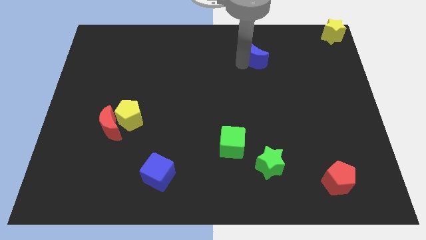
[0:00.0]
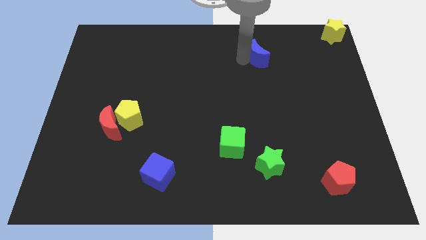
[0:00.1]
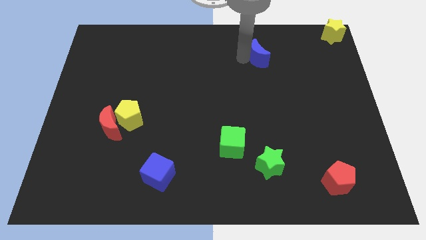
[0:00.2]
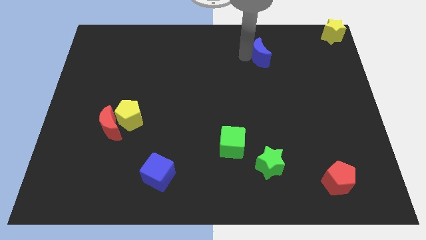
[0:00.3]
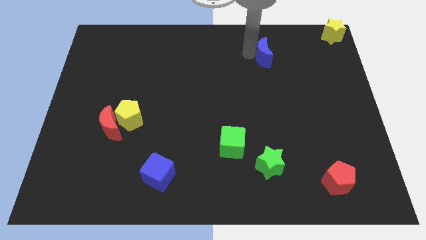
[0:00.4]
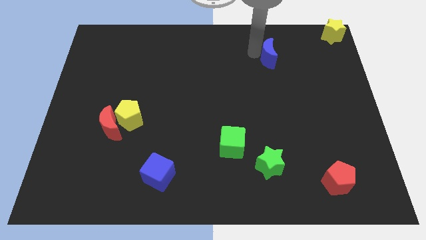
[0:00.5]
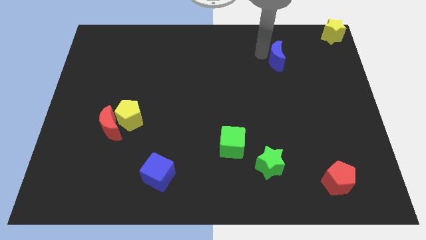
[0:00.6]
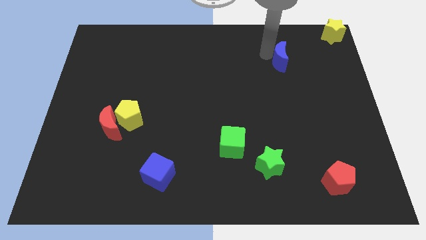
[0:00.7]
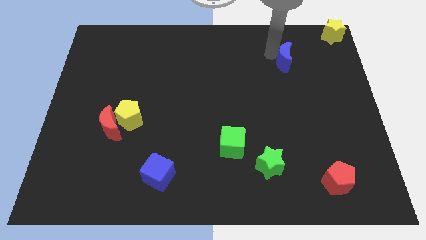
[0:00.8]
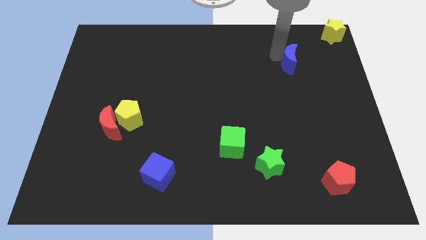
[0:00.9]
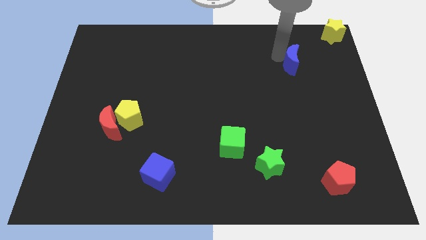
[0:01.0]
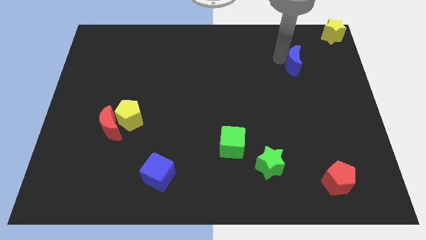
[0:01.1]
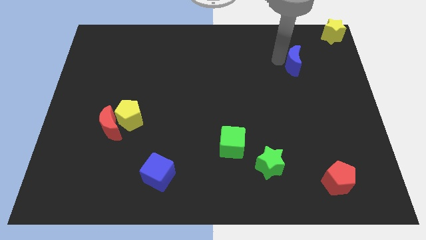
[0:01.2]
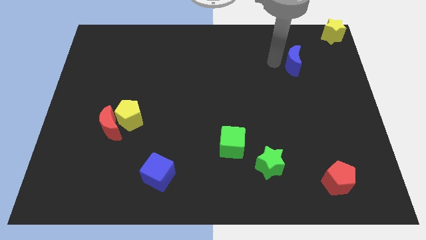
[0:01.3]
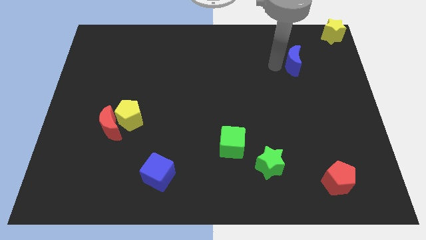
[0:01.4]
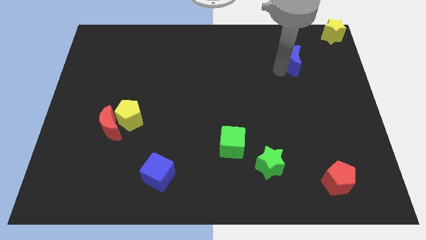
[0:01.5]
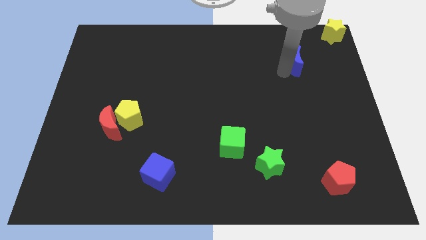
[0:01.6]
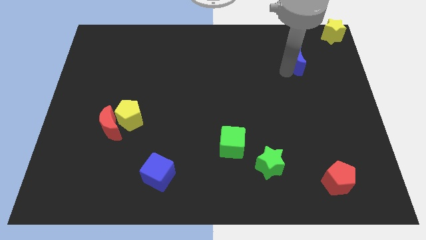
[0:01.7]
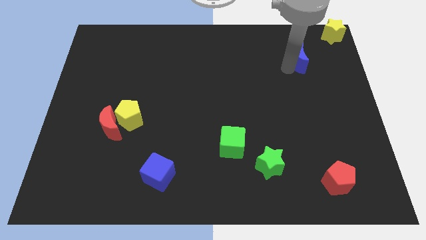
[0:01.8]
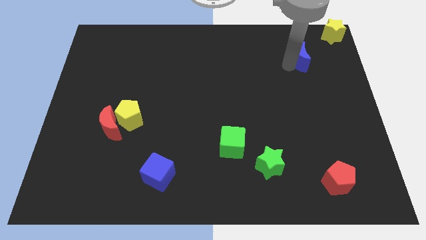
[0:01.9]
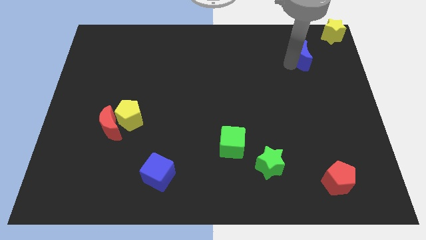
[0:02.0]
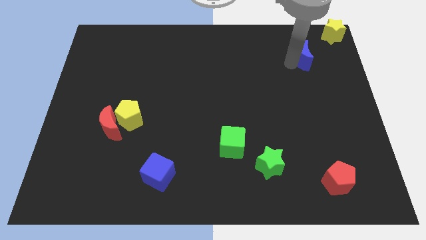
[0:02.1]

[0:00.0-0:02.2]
move the blue crescent to the top right of the board

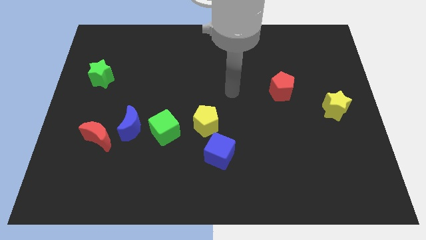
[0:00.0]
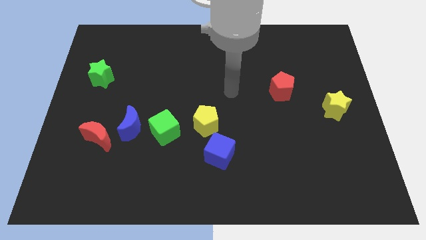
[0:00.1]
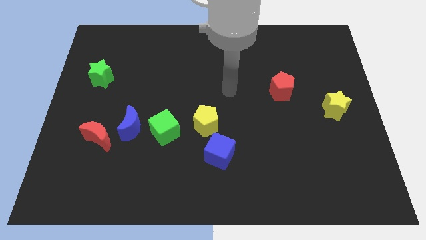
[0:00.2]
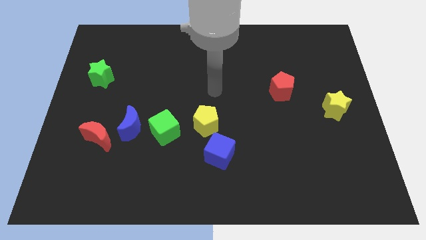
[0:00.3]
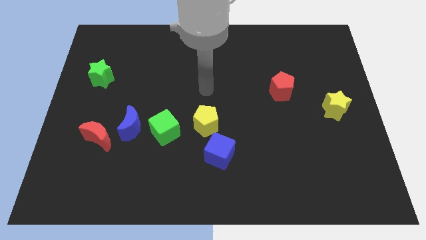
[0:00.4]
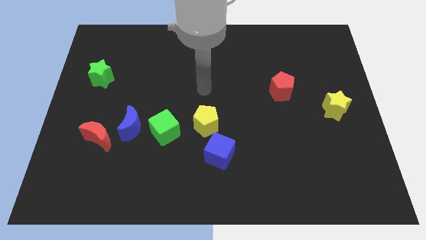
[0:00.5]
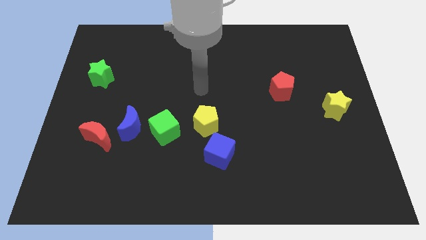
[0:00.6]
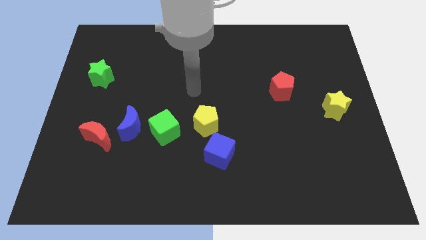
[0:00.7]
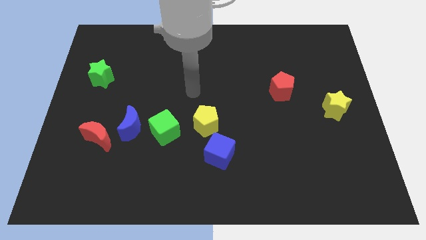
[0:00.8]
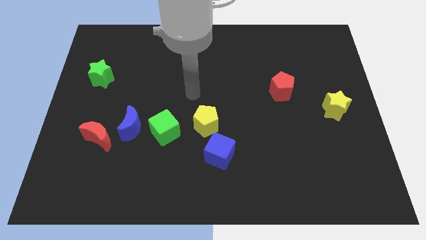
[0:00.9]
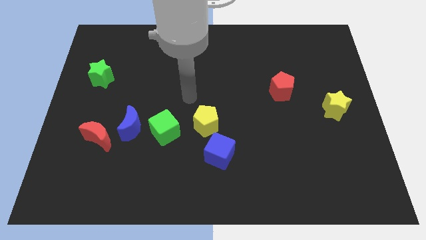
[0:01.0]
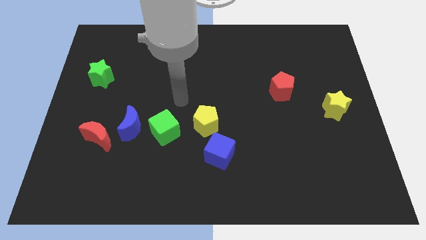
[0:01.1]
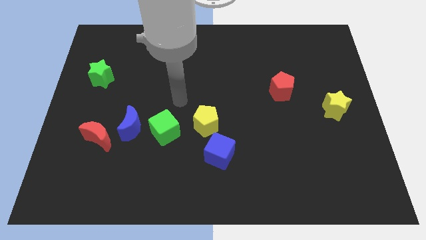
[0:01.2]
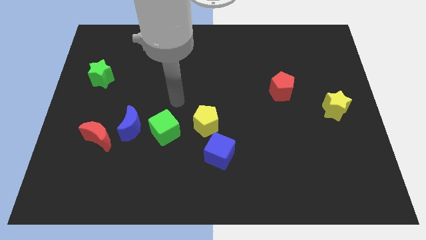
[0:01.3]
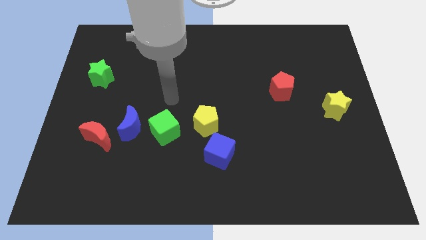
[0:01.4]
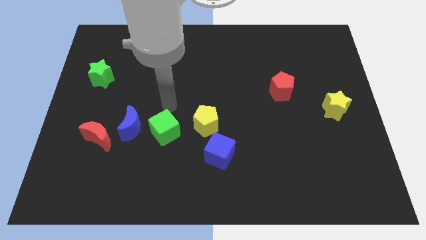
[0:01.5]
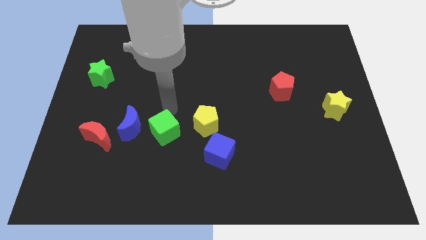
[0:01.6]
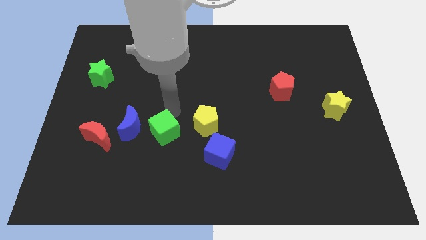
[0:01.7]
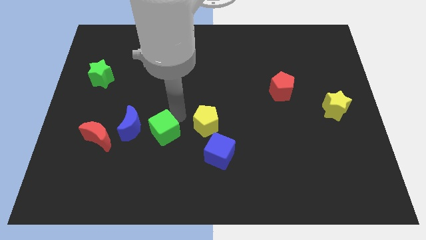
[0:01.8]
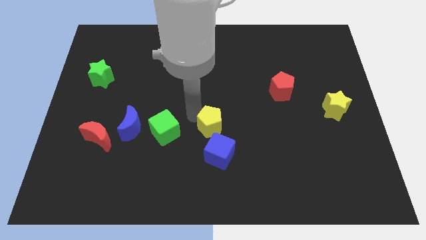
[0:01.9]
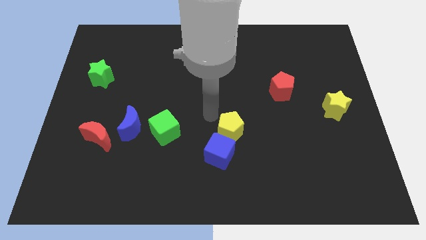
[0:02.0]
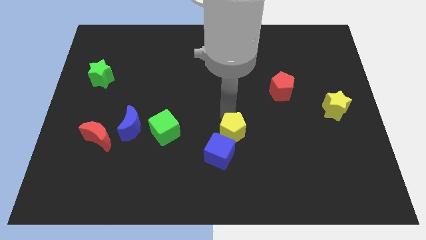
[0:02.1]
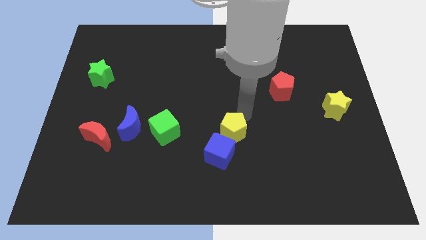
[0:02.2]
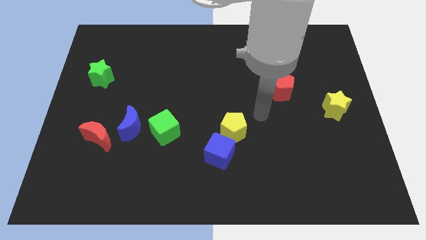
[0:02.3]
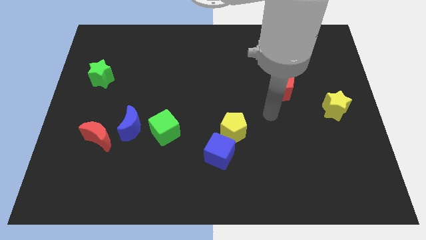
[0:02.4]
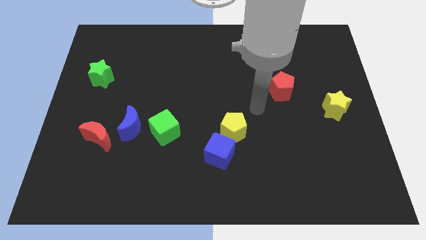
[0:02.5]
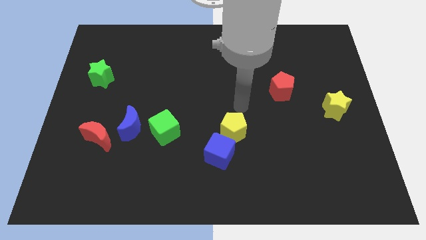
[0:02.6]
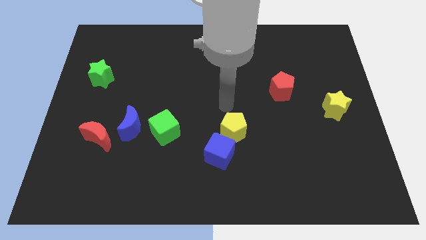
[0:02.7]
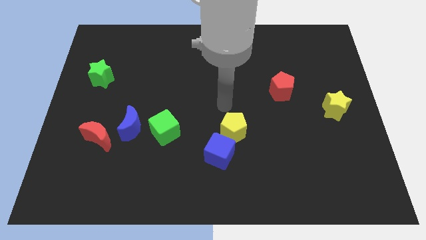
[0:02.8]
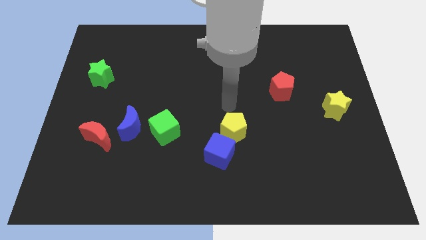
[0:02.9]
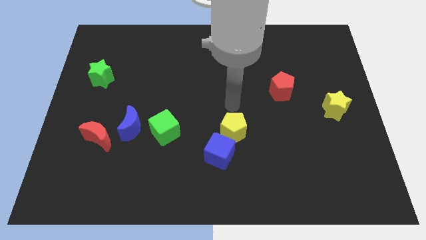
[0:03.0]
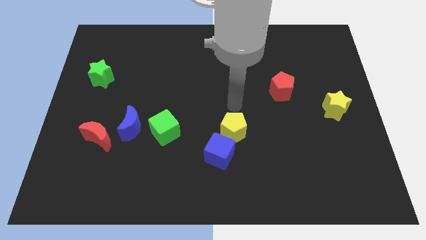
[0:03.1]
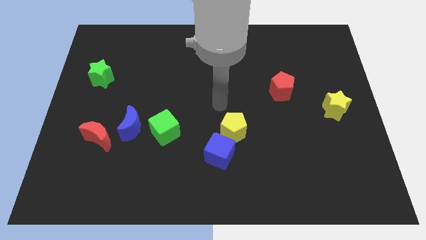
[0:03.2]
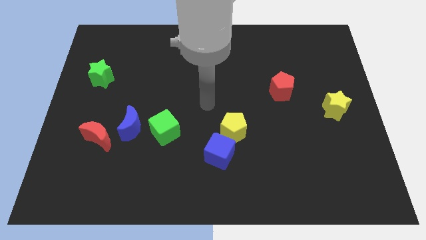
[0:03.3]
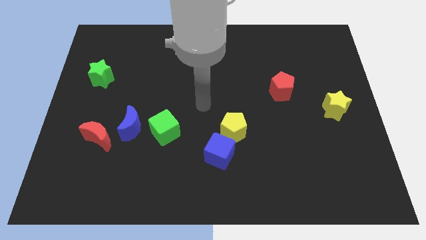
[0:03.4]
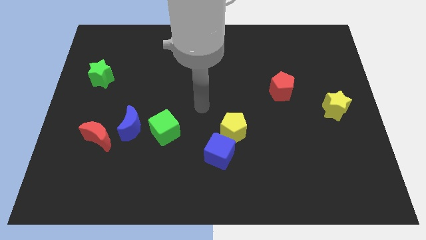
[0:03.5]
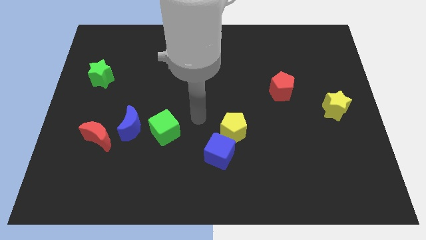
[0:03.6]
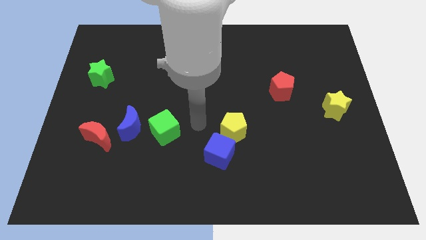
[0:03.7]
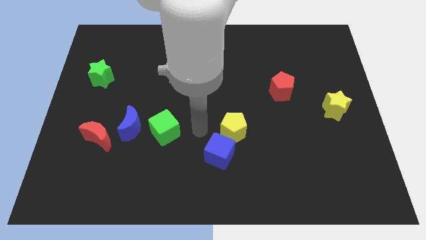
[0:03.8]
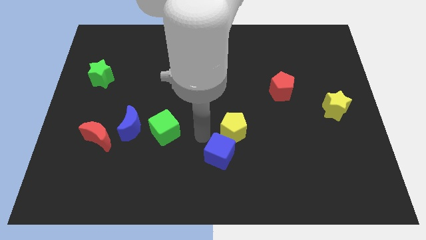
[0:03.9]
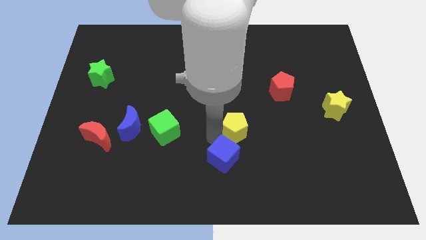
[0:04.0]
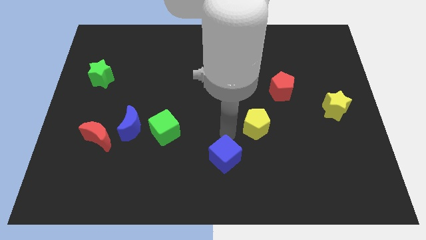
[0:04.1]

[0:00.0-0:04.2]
place the yellow pentagon above the blue cube

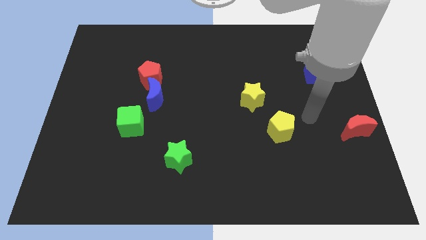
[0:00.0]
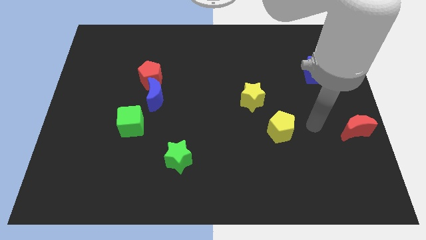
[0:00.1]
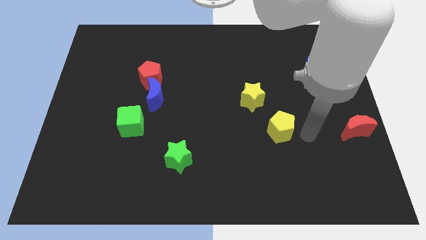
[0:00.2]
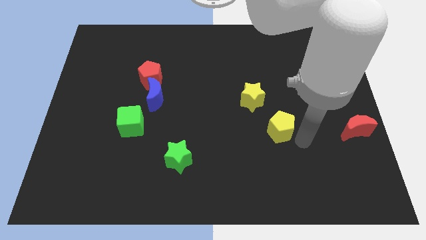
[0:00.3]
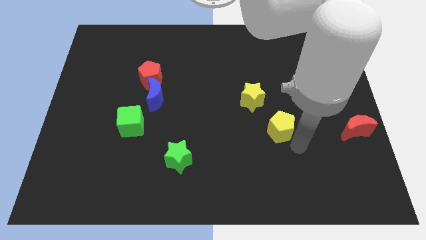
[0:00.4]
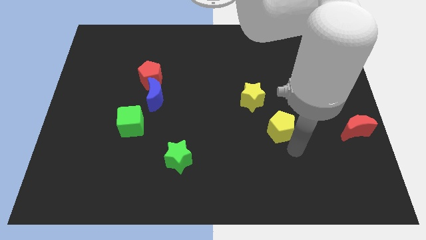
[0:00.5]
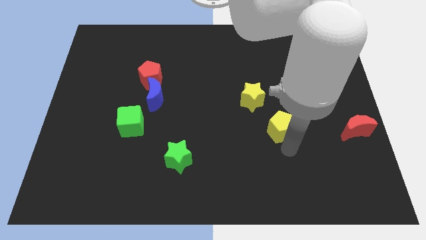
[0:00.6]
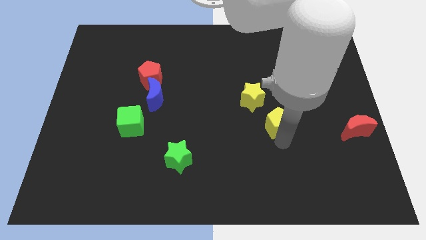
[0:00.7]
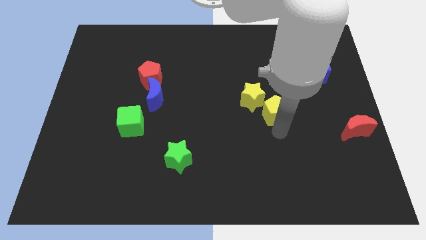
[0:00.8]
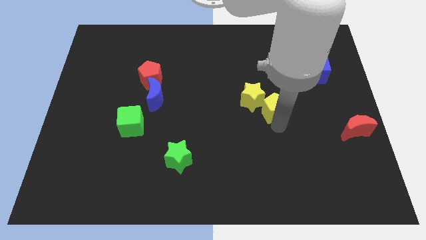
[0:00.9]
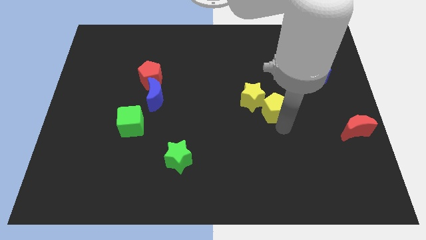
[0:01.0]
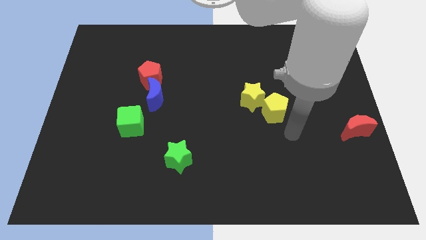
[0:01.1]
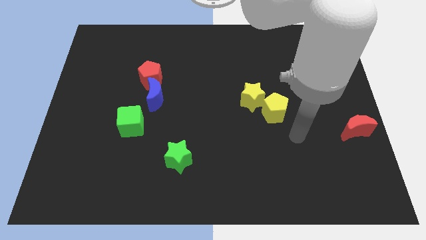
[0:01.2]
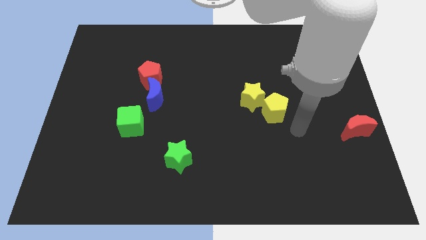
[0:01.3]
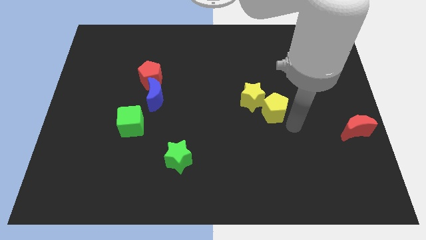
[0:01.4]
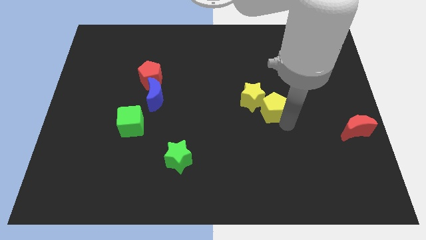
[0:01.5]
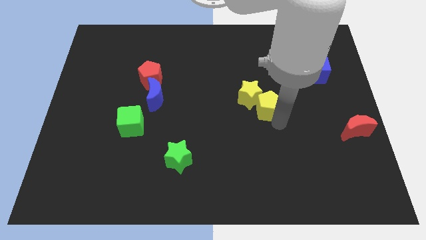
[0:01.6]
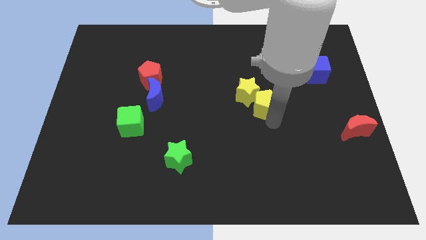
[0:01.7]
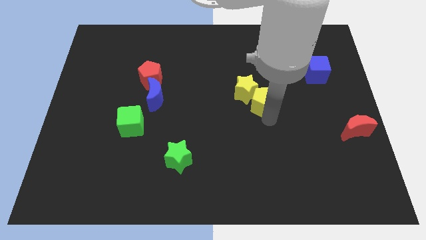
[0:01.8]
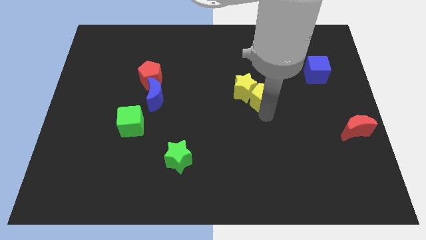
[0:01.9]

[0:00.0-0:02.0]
put yellow blocks together

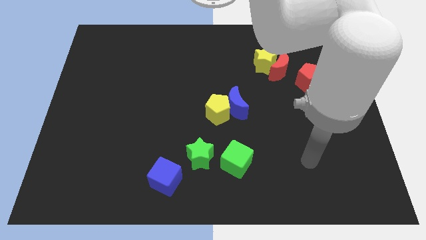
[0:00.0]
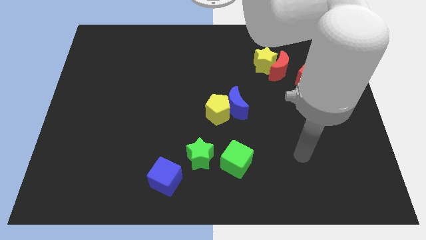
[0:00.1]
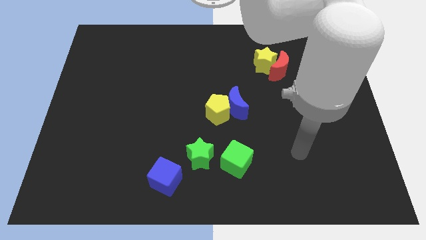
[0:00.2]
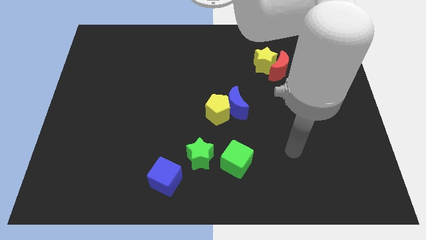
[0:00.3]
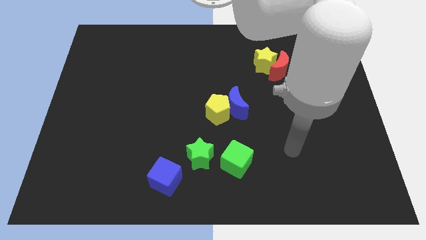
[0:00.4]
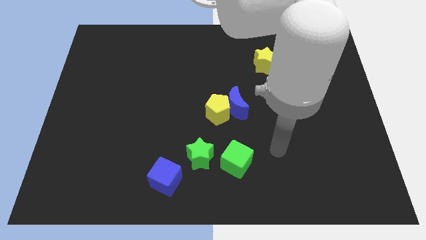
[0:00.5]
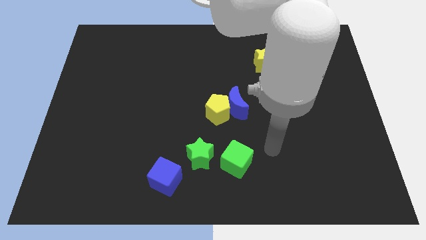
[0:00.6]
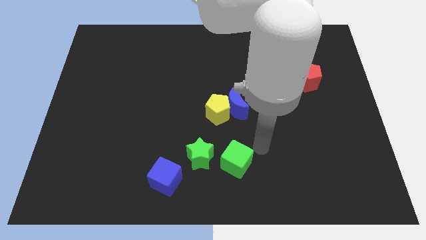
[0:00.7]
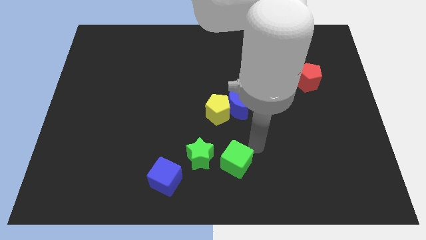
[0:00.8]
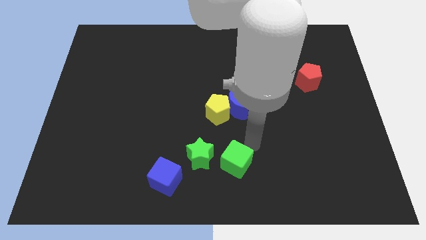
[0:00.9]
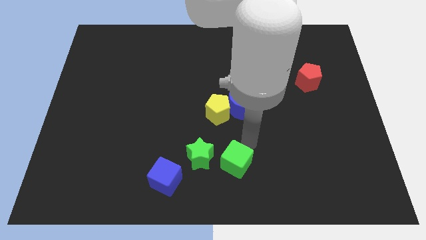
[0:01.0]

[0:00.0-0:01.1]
place the arm above the green cube
